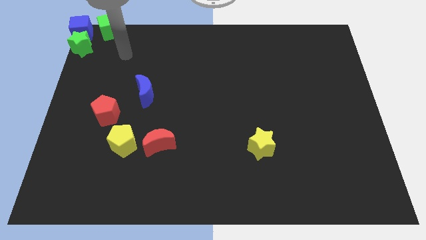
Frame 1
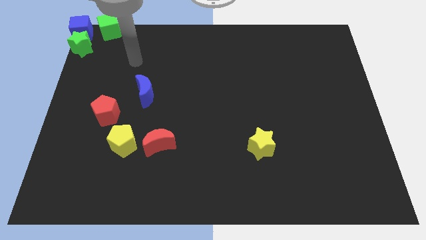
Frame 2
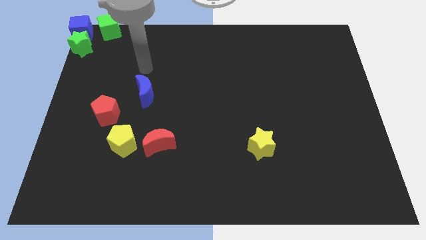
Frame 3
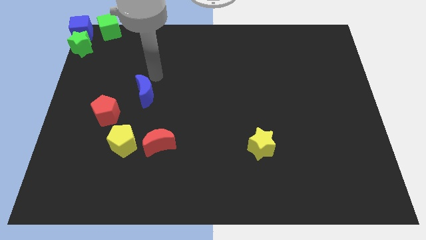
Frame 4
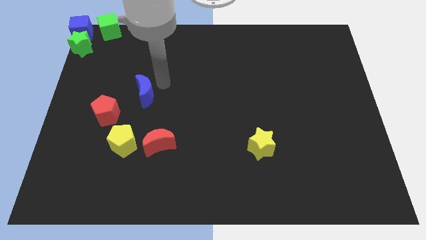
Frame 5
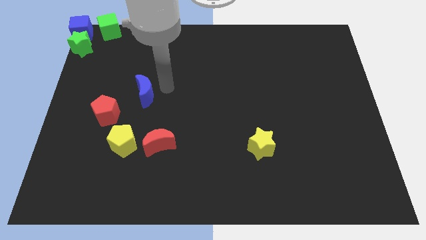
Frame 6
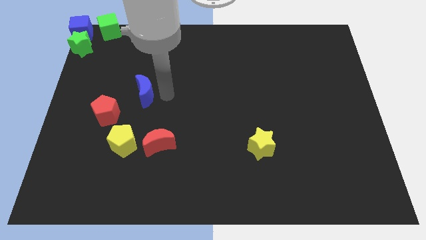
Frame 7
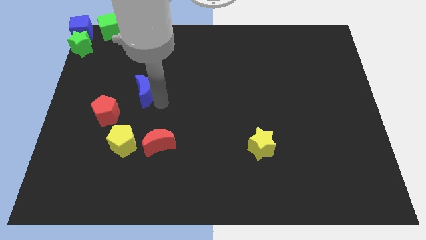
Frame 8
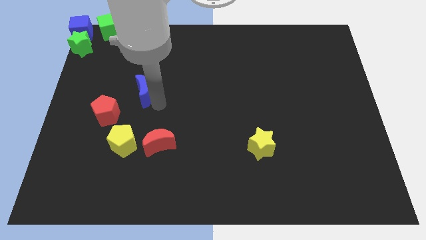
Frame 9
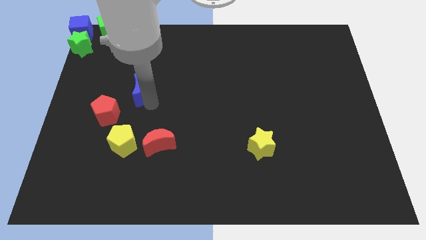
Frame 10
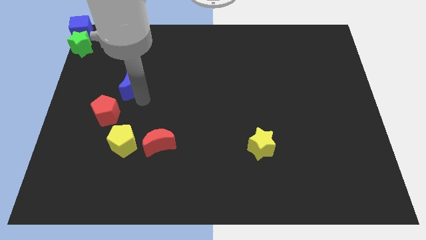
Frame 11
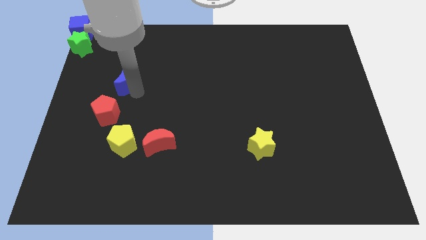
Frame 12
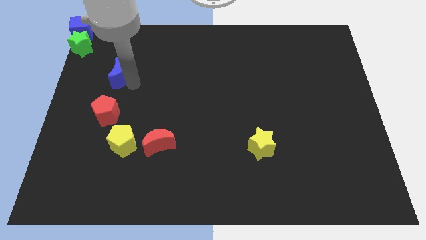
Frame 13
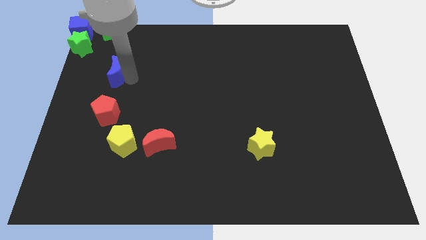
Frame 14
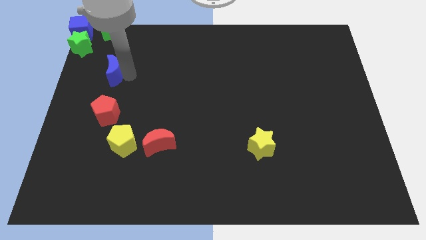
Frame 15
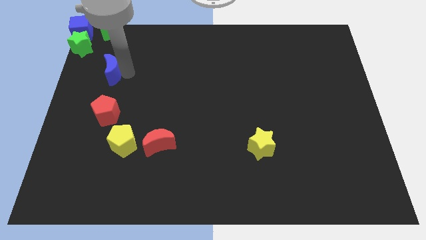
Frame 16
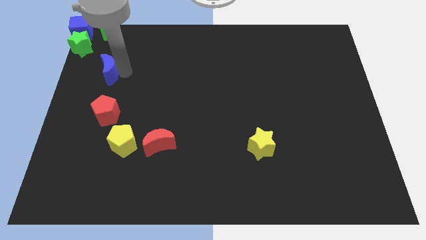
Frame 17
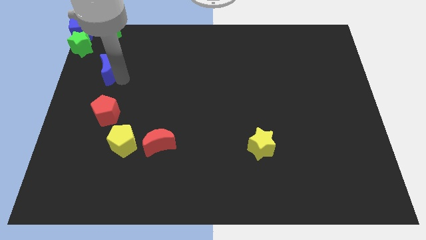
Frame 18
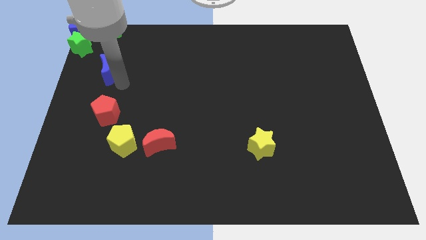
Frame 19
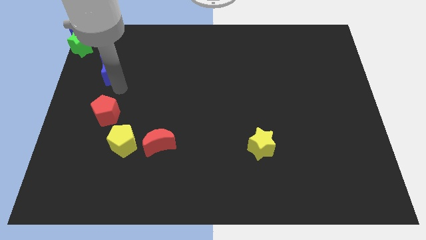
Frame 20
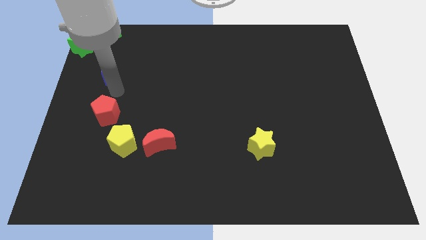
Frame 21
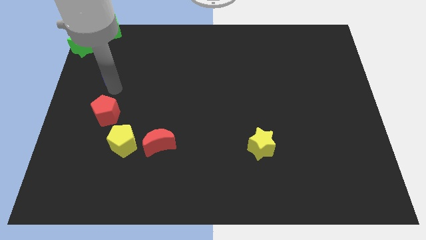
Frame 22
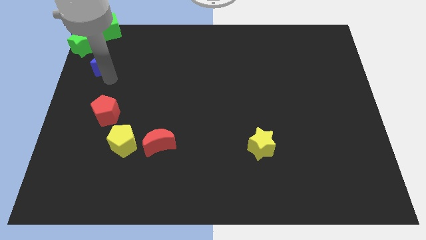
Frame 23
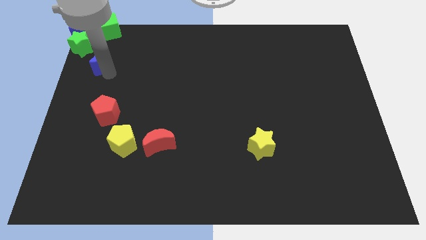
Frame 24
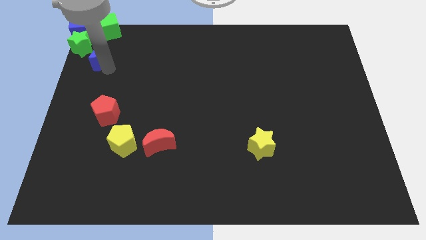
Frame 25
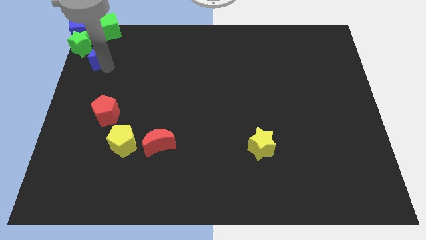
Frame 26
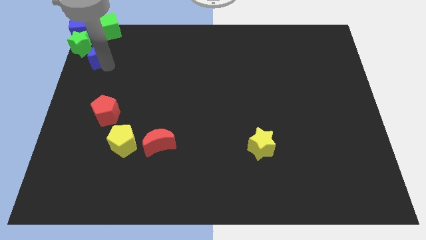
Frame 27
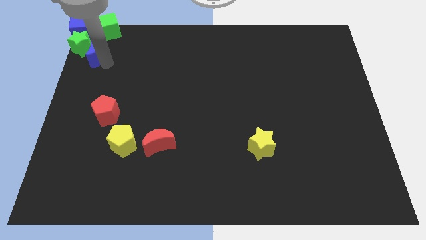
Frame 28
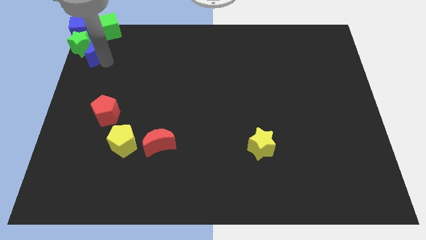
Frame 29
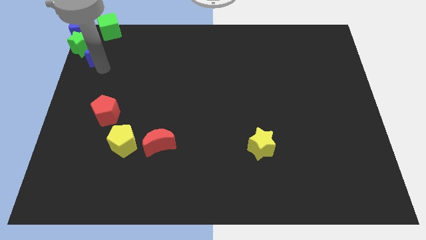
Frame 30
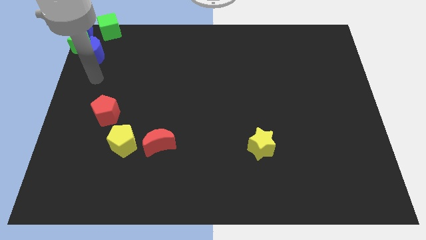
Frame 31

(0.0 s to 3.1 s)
place the blue moon diagonally above the red pentagon

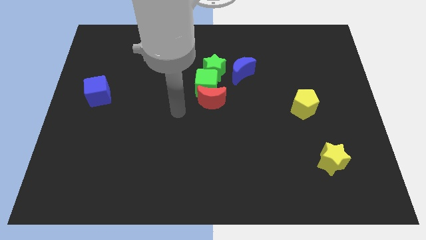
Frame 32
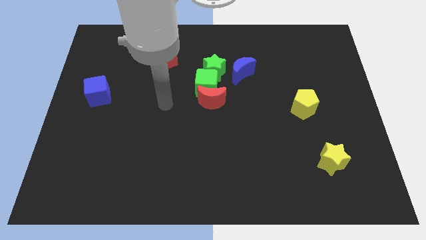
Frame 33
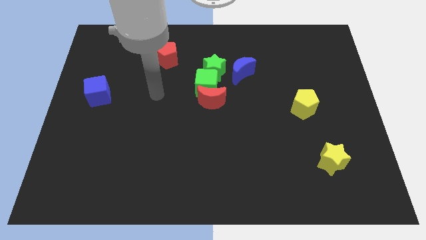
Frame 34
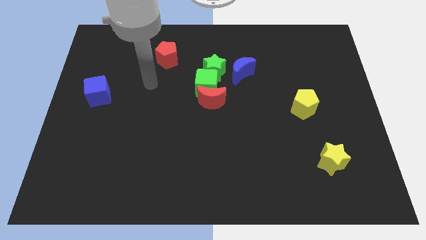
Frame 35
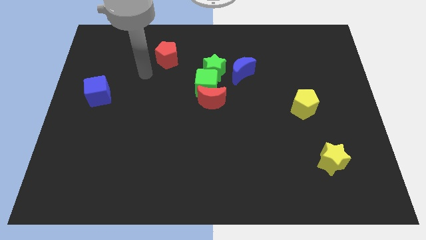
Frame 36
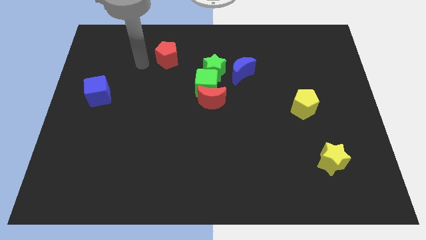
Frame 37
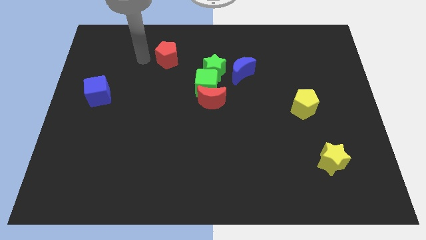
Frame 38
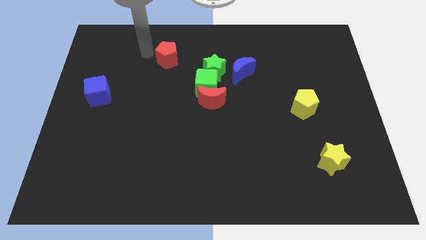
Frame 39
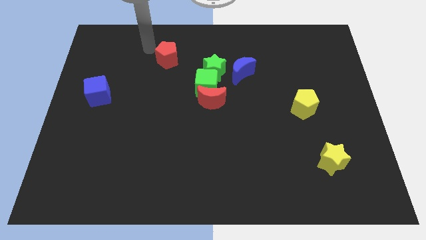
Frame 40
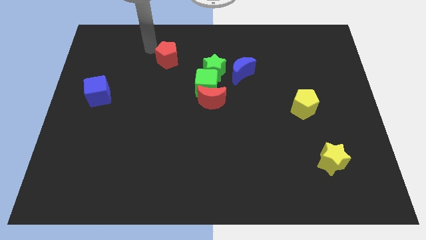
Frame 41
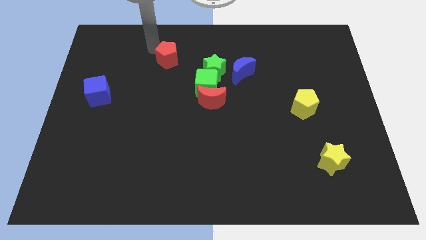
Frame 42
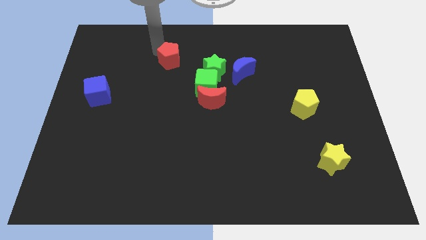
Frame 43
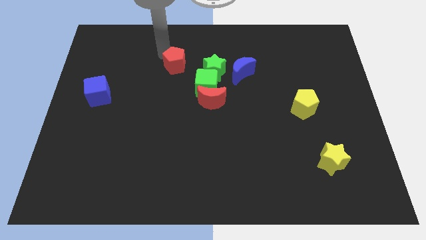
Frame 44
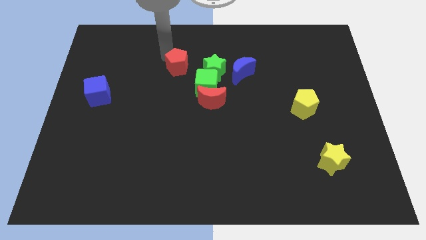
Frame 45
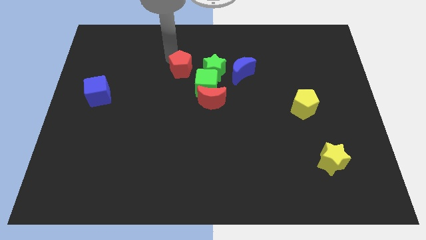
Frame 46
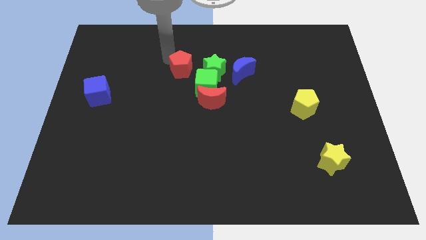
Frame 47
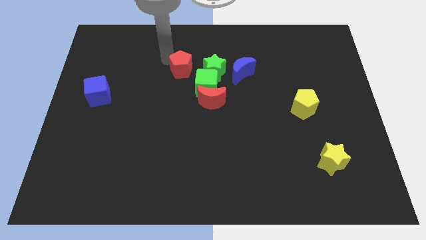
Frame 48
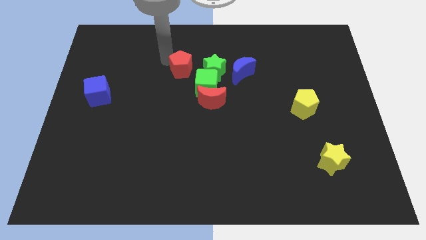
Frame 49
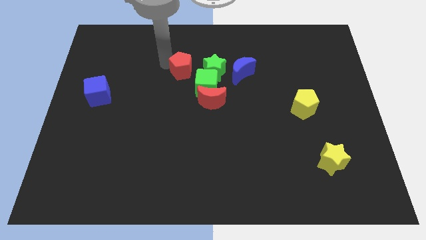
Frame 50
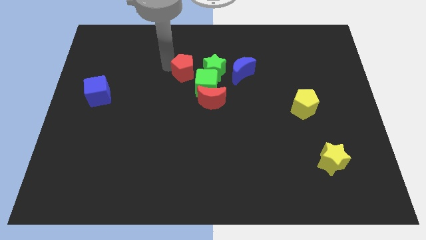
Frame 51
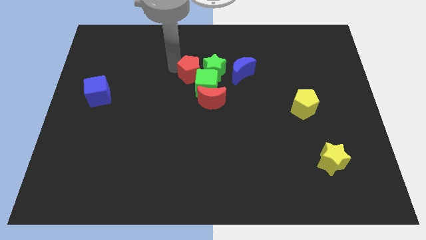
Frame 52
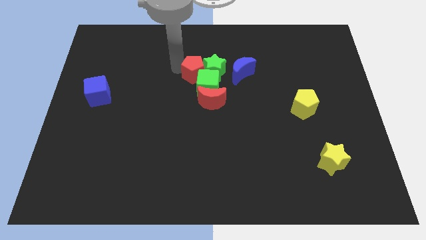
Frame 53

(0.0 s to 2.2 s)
push the red pentagon closer to the green cube

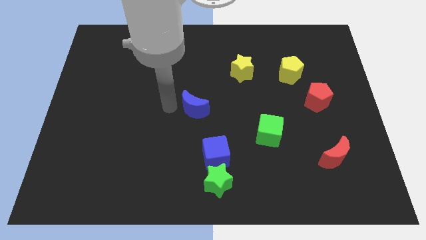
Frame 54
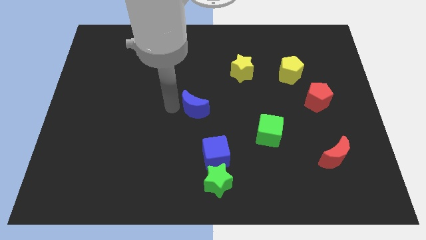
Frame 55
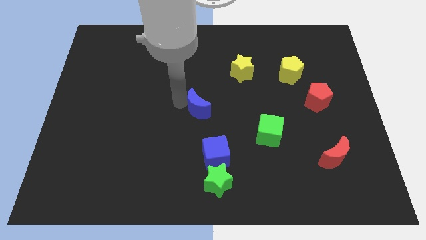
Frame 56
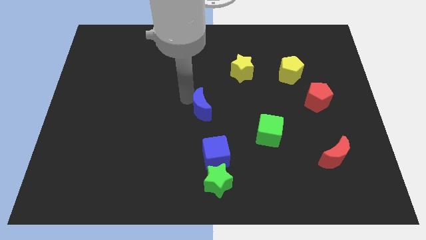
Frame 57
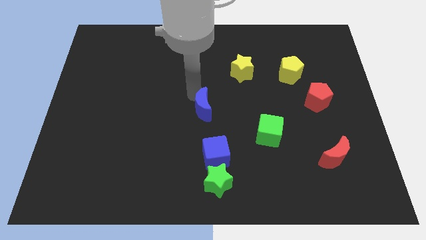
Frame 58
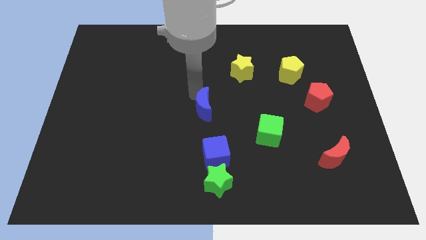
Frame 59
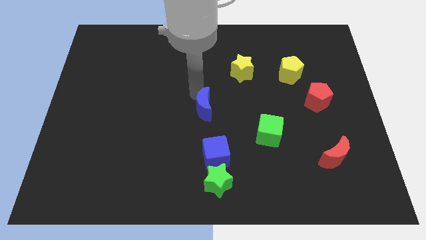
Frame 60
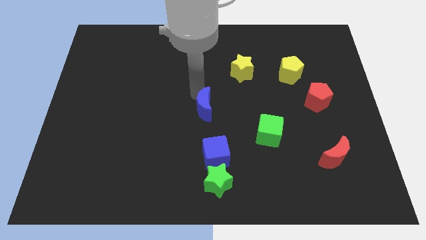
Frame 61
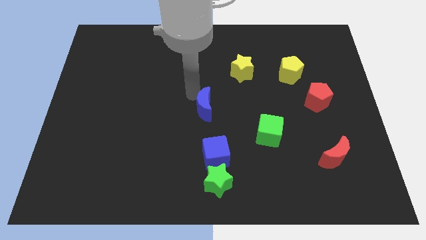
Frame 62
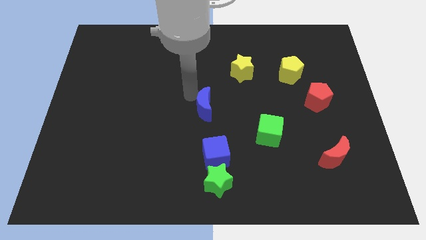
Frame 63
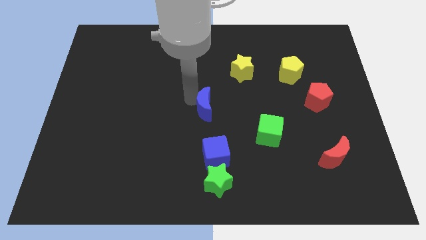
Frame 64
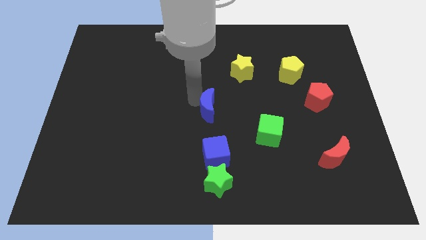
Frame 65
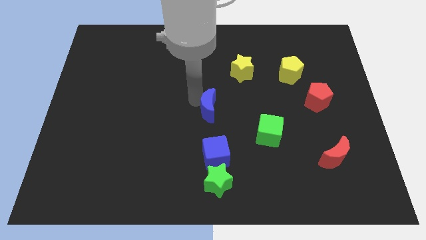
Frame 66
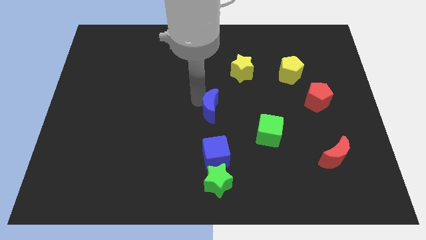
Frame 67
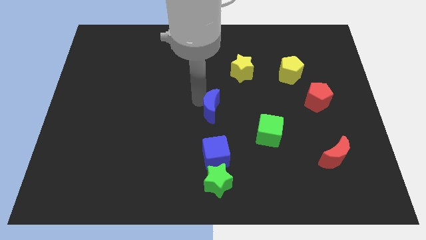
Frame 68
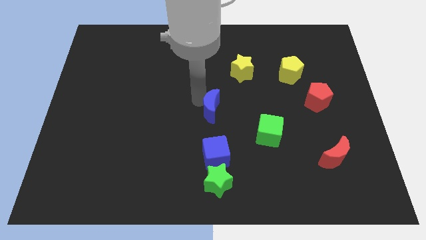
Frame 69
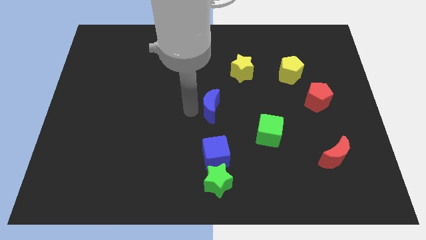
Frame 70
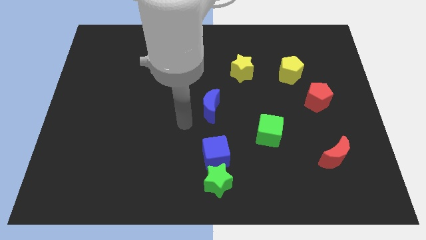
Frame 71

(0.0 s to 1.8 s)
move the blue moon vertically above the blue cube

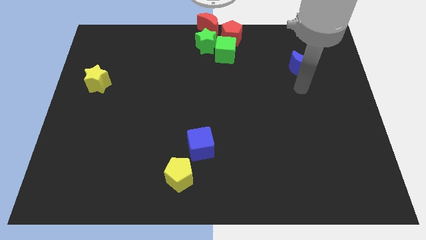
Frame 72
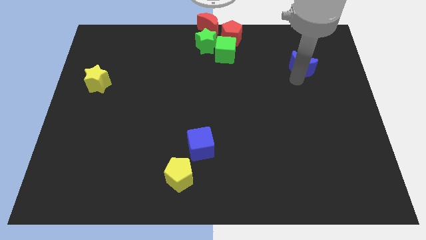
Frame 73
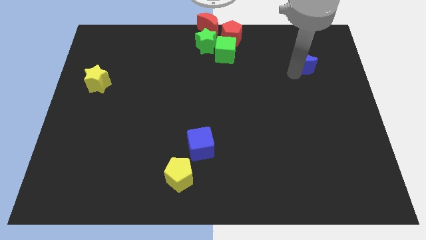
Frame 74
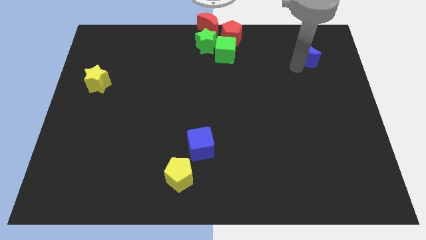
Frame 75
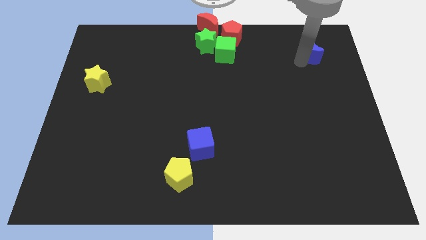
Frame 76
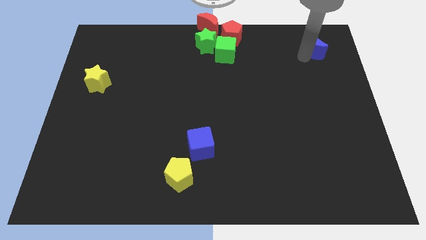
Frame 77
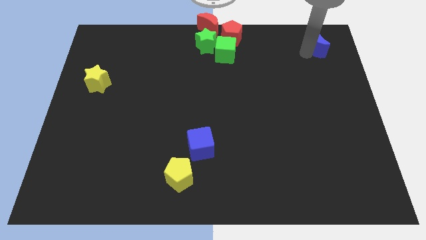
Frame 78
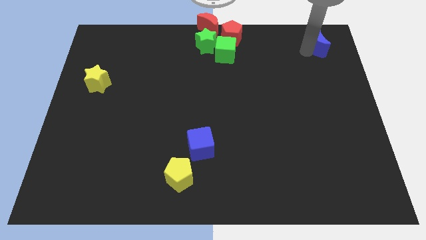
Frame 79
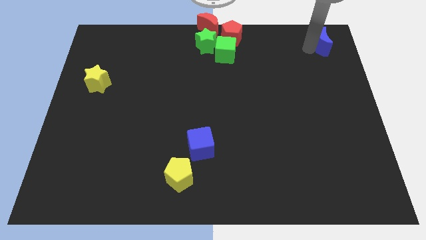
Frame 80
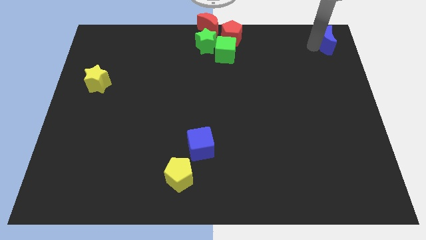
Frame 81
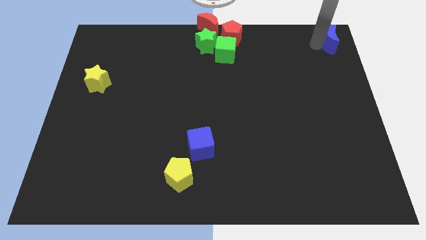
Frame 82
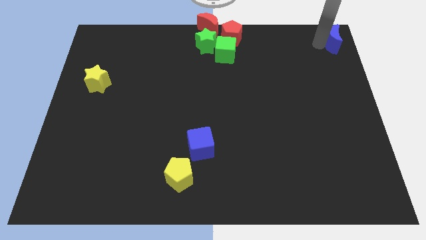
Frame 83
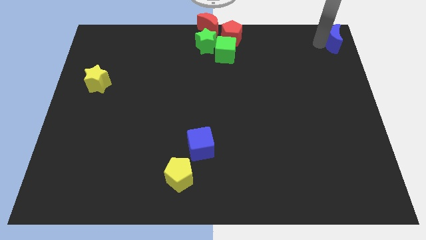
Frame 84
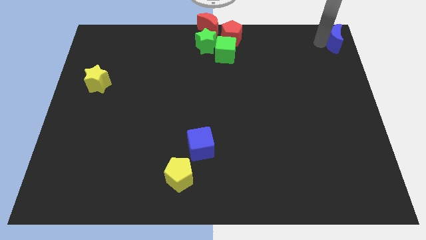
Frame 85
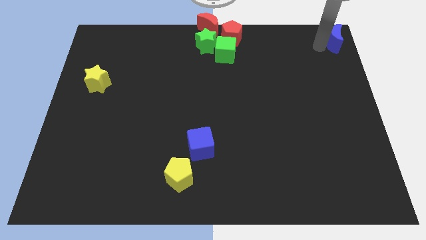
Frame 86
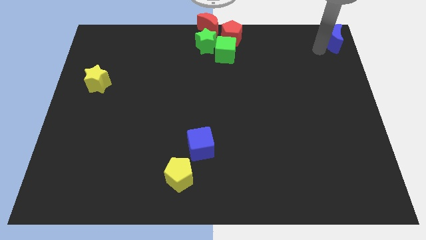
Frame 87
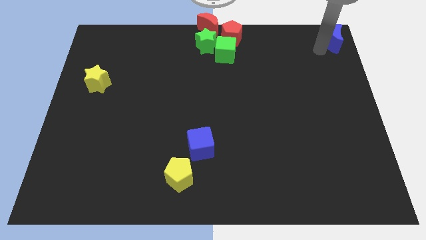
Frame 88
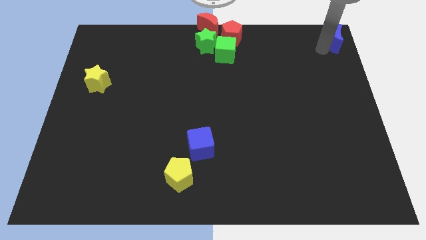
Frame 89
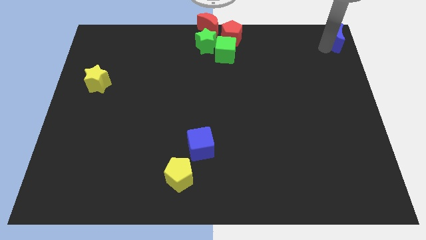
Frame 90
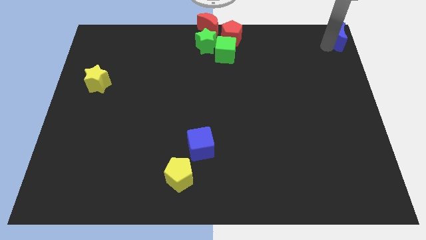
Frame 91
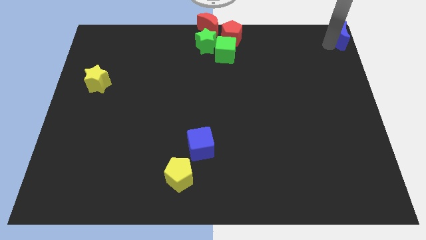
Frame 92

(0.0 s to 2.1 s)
push the blue crescent to the top right corner
